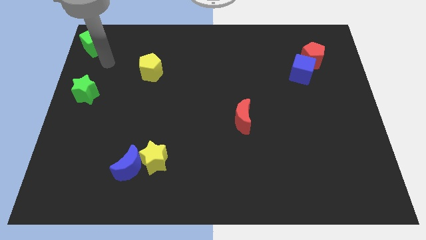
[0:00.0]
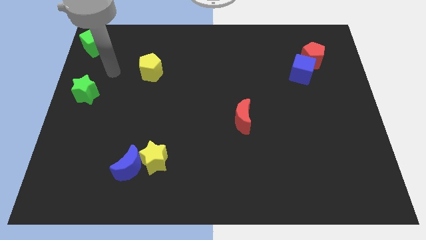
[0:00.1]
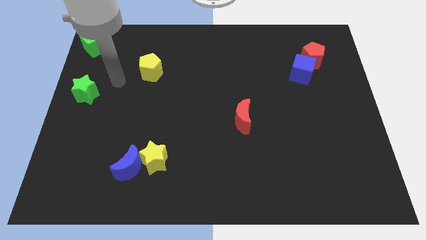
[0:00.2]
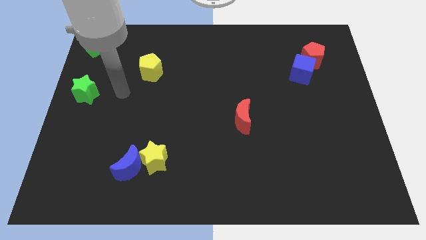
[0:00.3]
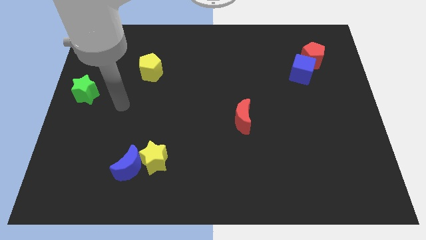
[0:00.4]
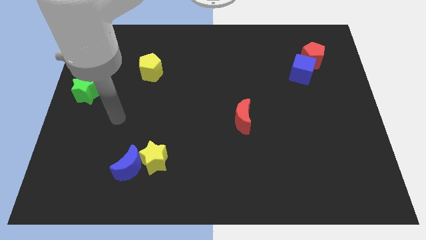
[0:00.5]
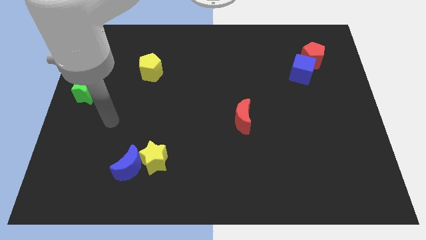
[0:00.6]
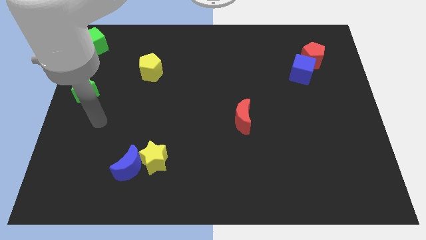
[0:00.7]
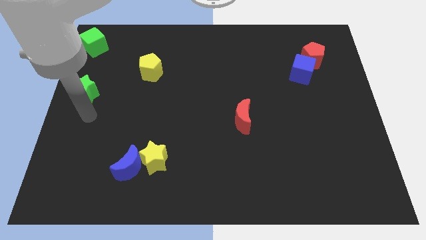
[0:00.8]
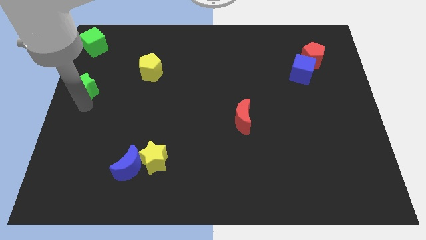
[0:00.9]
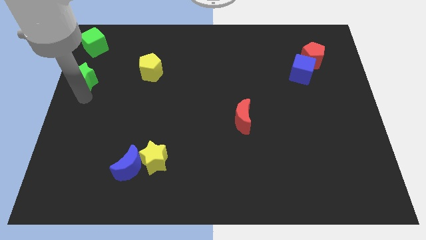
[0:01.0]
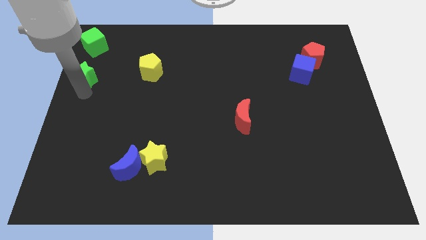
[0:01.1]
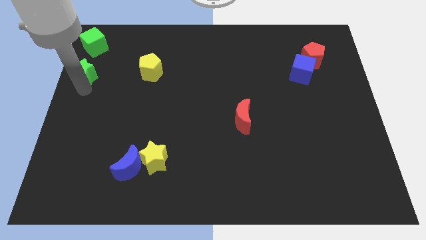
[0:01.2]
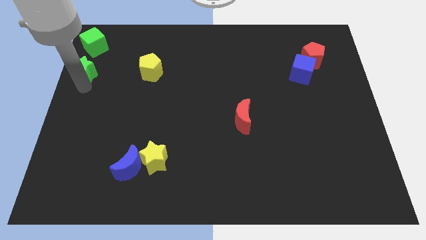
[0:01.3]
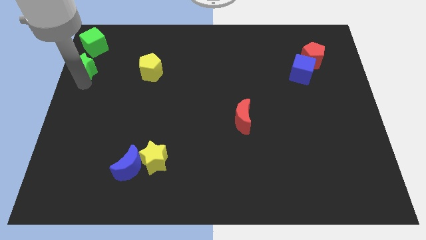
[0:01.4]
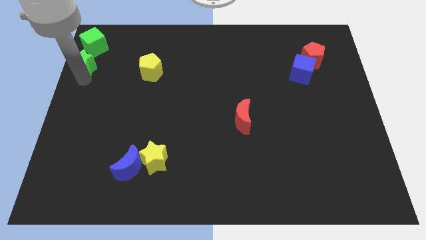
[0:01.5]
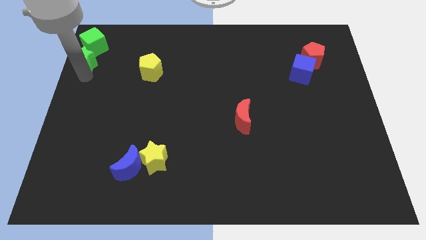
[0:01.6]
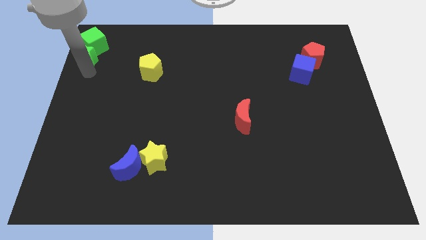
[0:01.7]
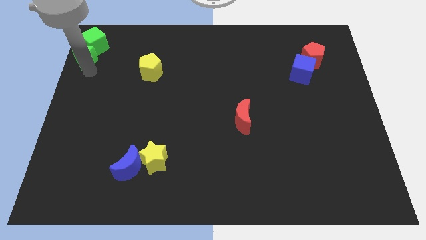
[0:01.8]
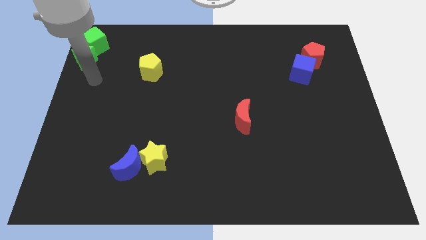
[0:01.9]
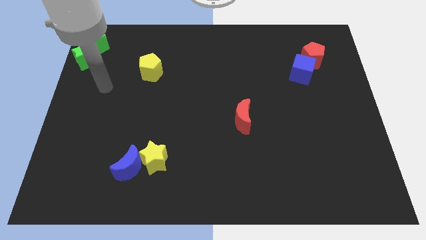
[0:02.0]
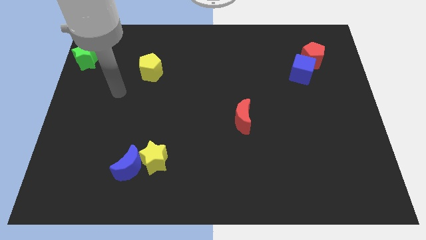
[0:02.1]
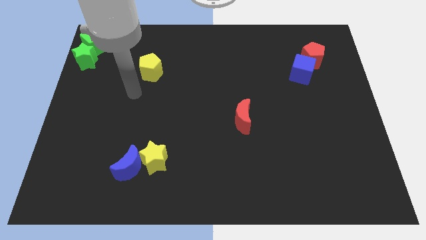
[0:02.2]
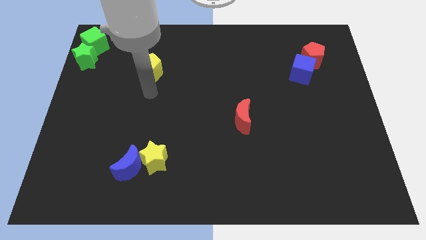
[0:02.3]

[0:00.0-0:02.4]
push the green star into the green cube

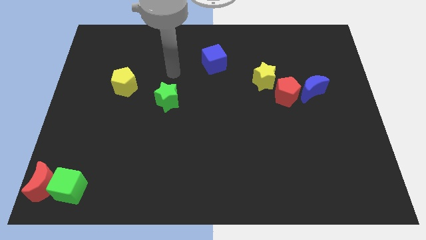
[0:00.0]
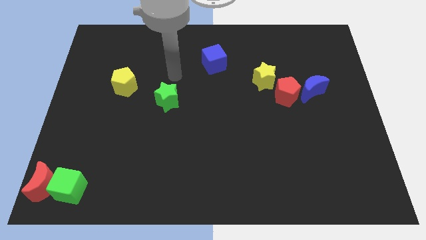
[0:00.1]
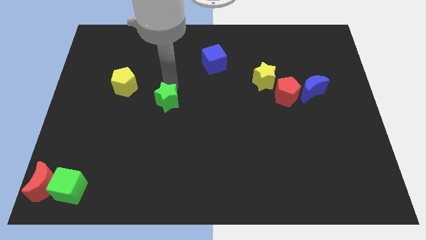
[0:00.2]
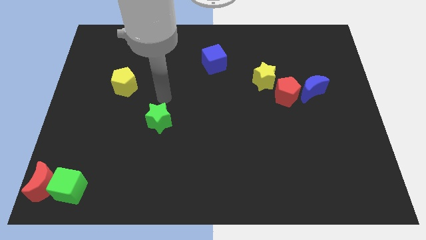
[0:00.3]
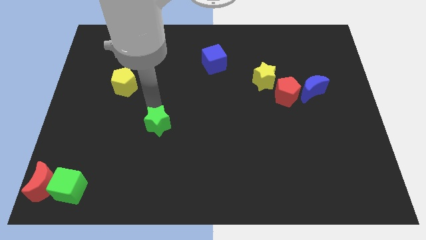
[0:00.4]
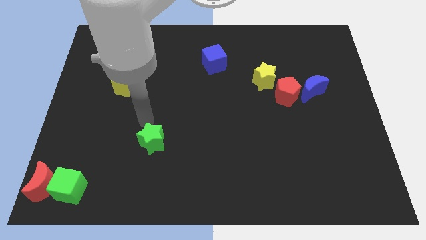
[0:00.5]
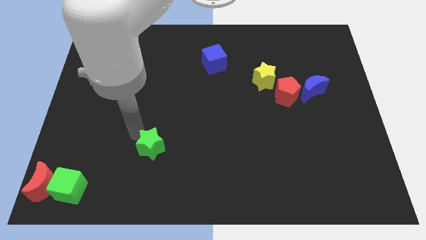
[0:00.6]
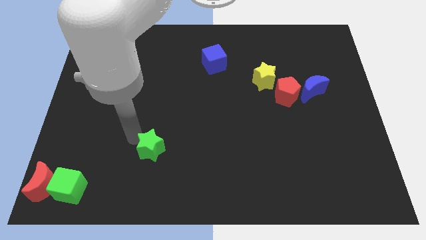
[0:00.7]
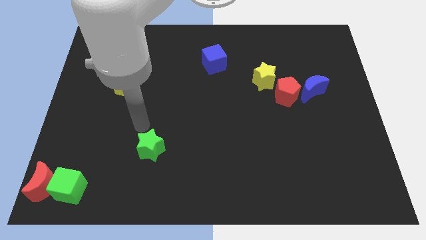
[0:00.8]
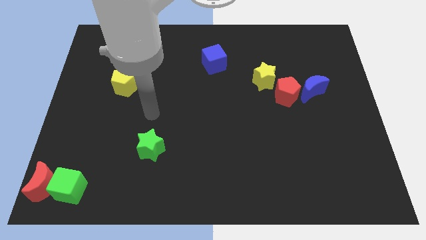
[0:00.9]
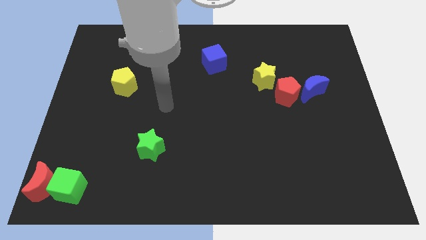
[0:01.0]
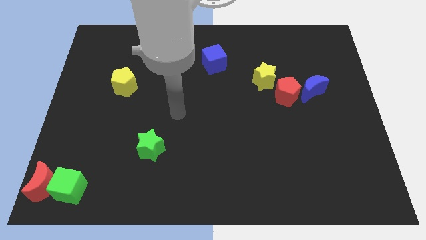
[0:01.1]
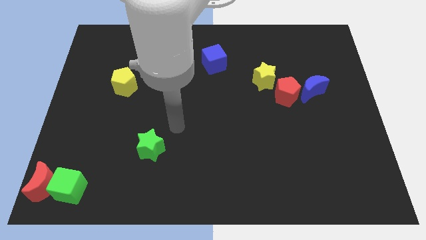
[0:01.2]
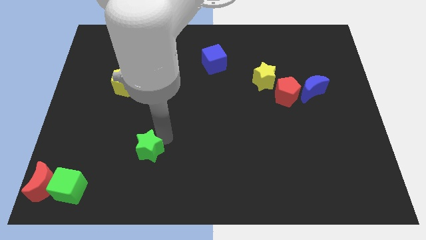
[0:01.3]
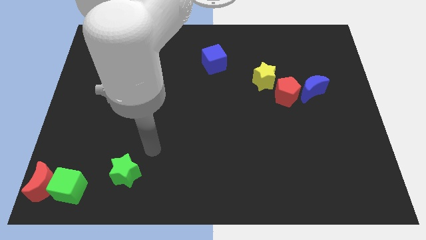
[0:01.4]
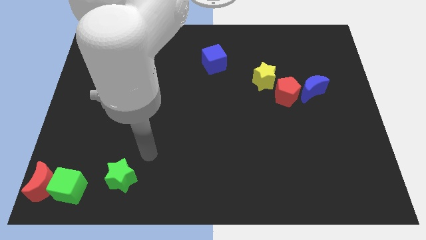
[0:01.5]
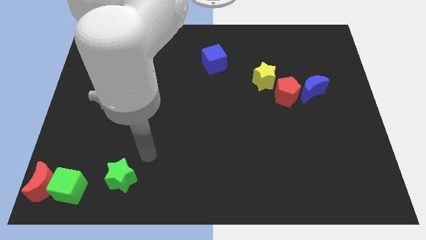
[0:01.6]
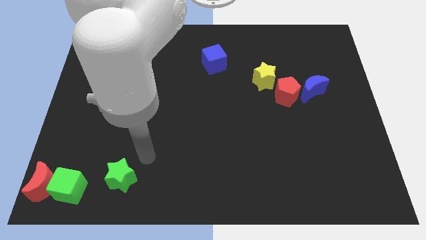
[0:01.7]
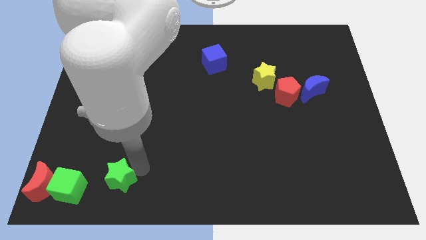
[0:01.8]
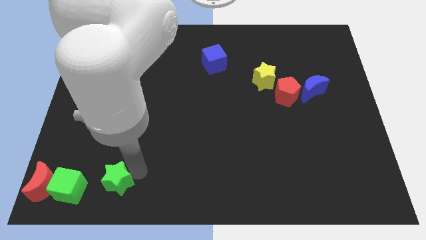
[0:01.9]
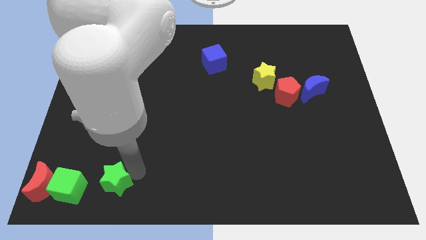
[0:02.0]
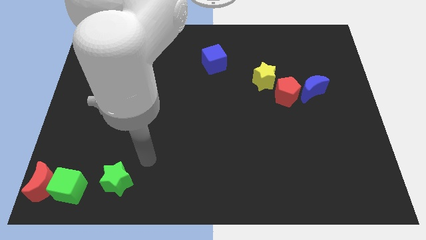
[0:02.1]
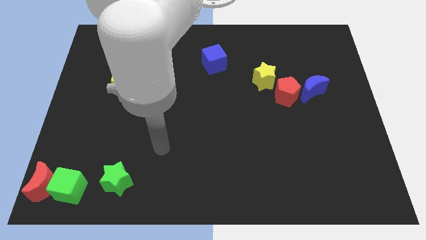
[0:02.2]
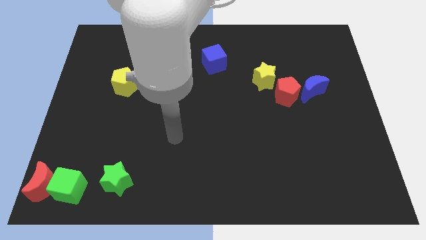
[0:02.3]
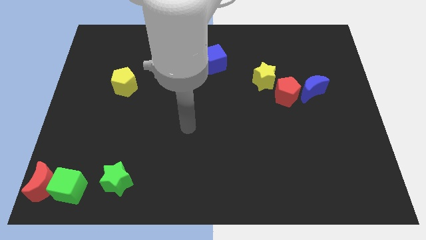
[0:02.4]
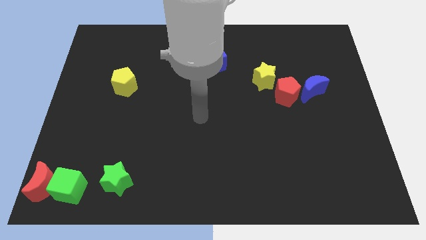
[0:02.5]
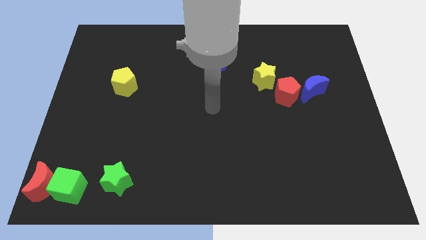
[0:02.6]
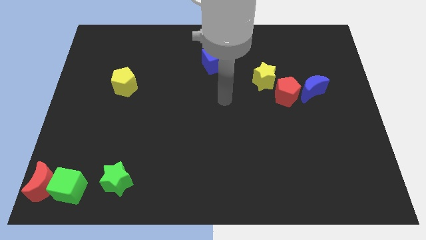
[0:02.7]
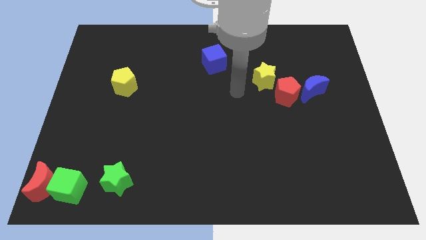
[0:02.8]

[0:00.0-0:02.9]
push the green star downward

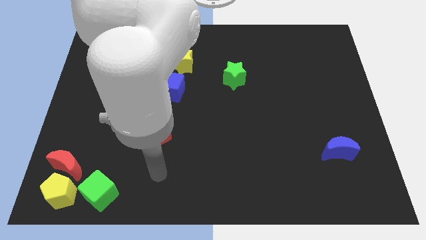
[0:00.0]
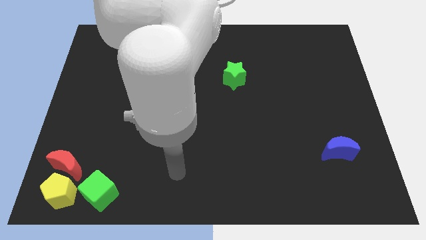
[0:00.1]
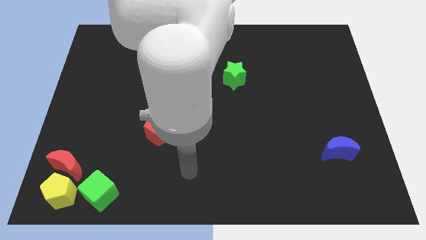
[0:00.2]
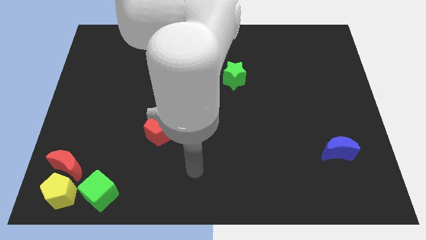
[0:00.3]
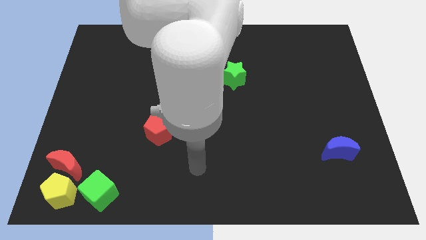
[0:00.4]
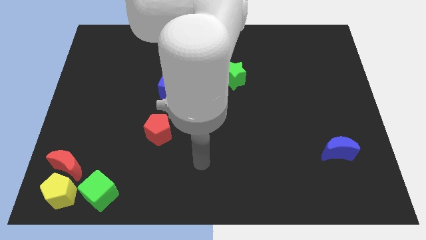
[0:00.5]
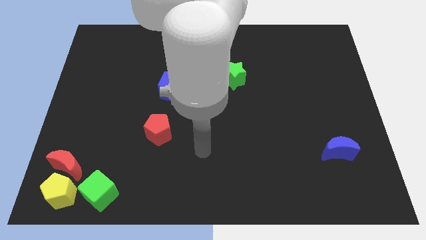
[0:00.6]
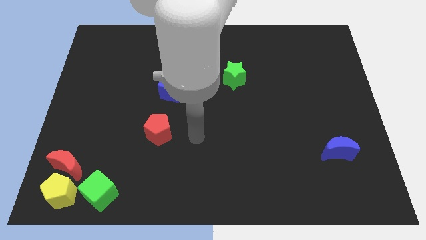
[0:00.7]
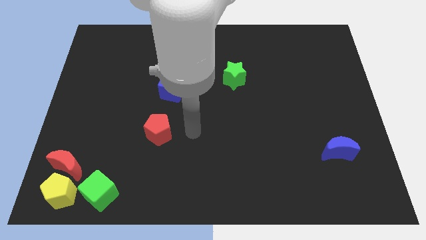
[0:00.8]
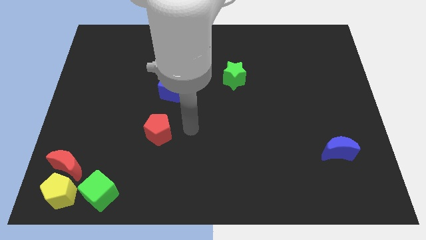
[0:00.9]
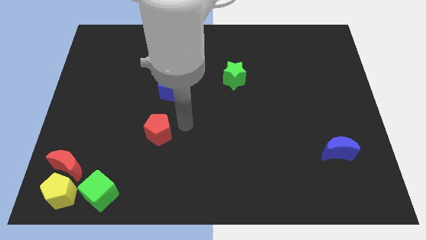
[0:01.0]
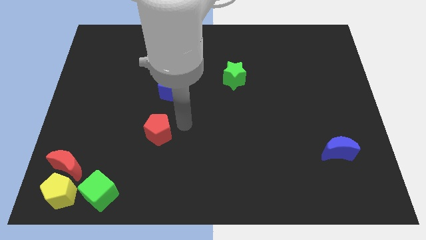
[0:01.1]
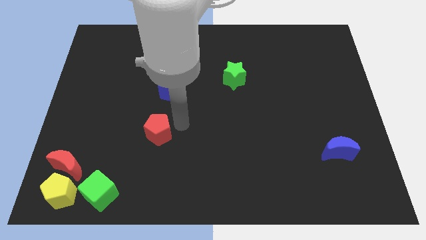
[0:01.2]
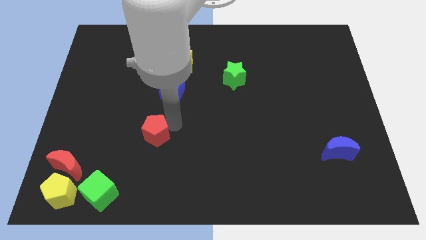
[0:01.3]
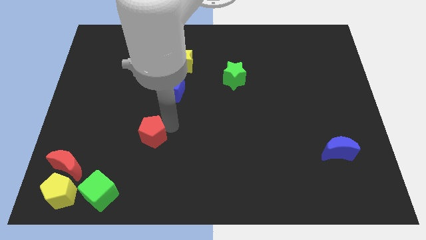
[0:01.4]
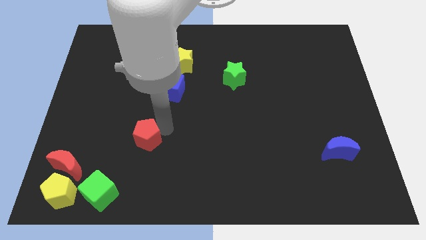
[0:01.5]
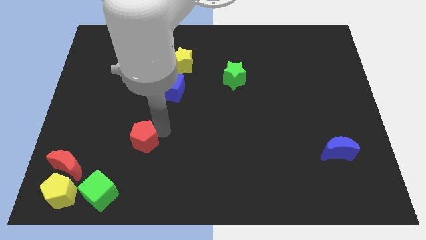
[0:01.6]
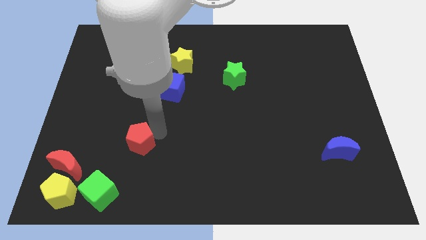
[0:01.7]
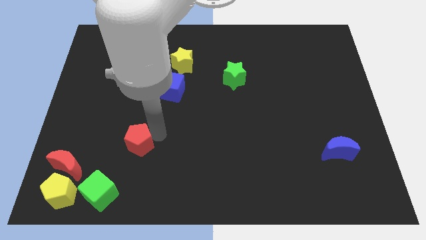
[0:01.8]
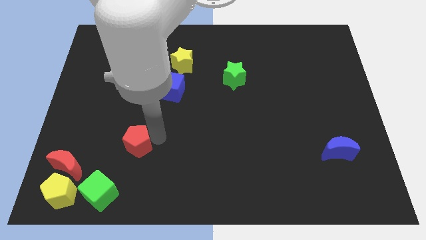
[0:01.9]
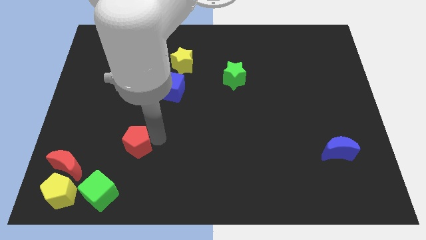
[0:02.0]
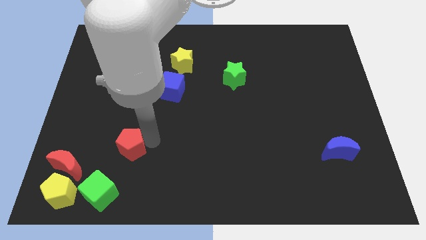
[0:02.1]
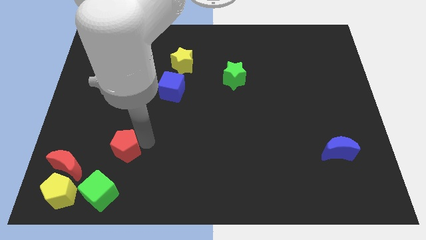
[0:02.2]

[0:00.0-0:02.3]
push the red pentagon to the top right of green cube

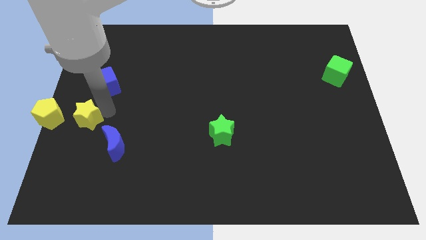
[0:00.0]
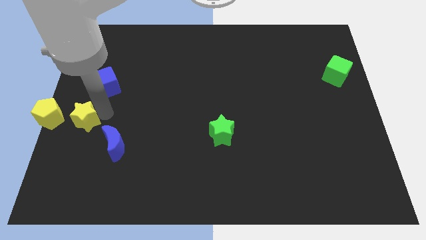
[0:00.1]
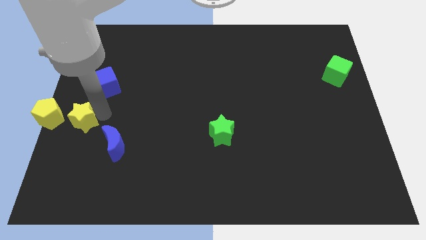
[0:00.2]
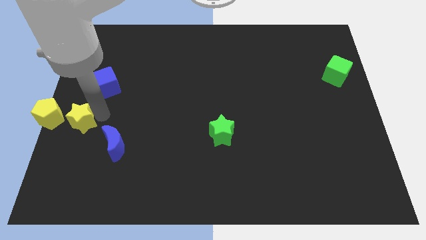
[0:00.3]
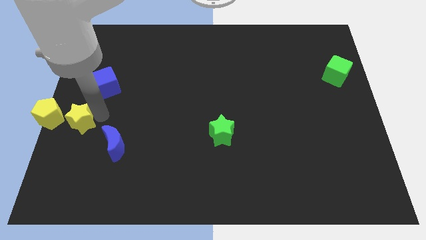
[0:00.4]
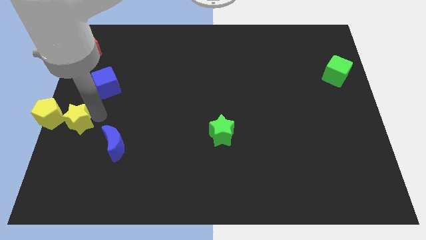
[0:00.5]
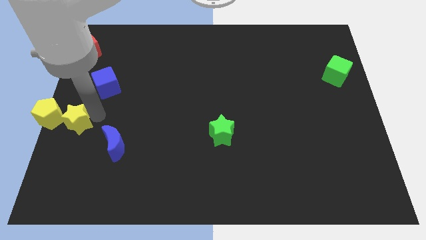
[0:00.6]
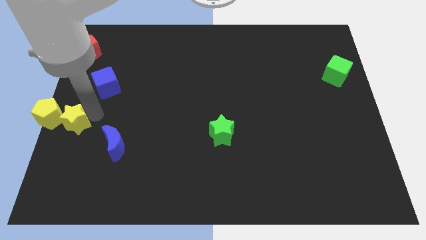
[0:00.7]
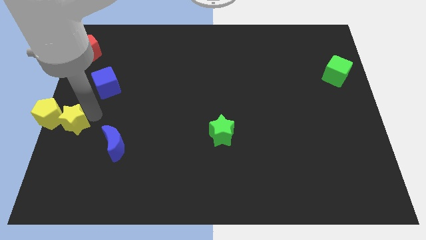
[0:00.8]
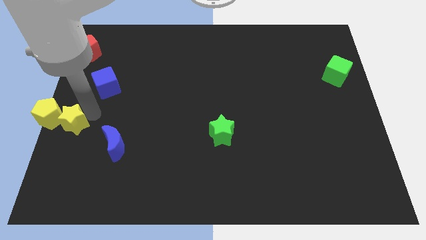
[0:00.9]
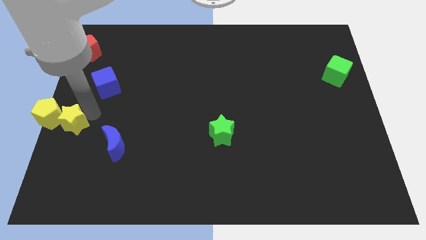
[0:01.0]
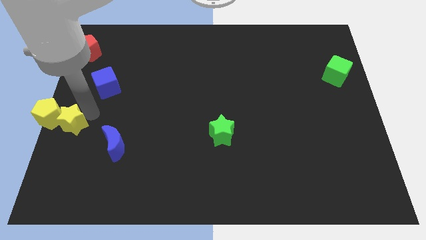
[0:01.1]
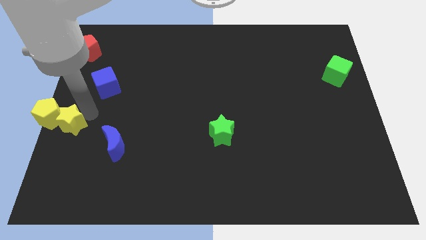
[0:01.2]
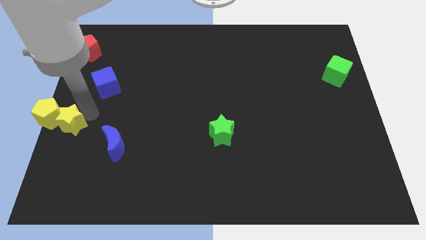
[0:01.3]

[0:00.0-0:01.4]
place the yellow star to the bottom right of the yellow pentagon
